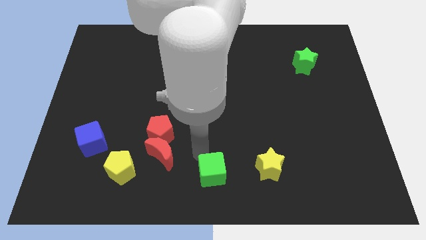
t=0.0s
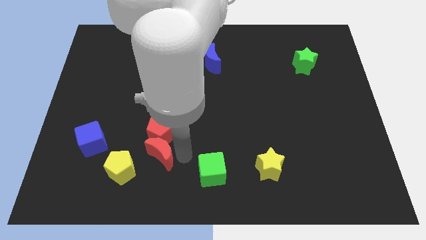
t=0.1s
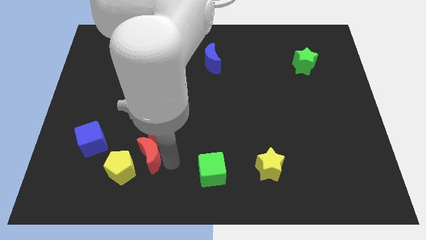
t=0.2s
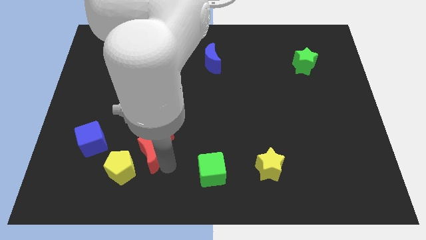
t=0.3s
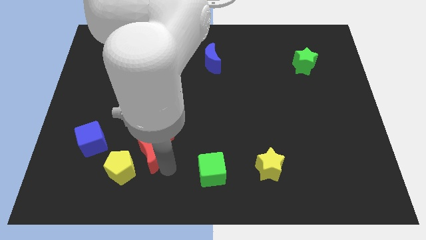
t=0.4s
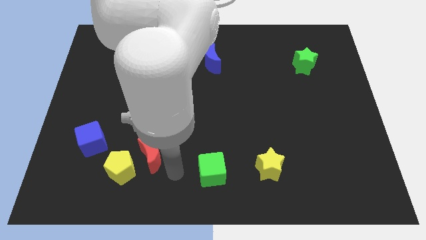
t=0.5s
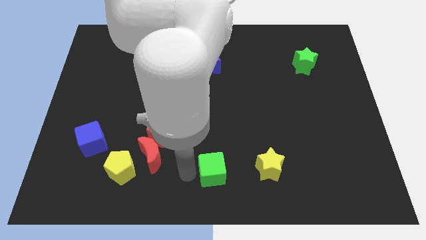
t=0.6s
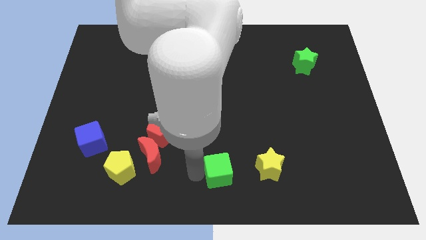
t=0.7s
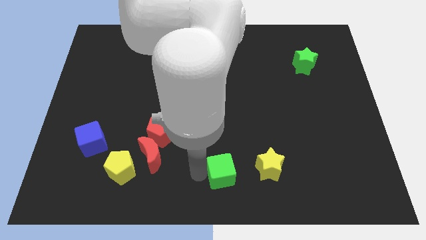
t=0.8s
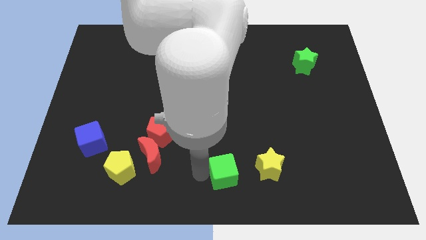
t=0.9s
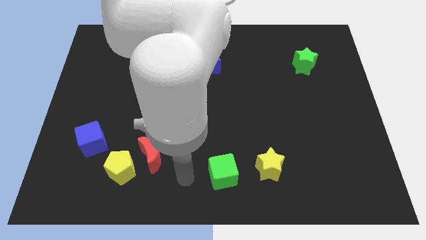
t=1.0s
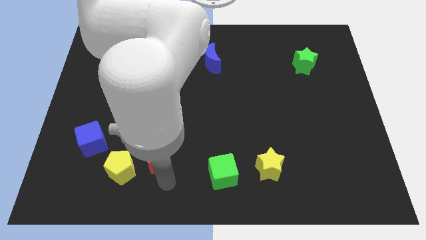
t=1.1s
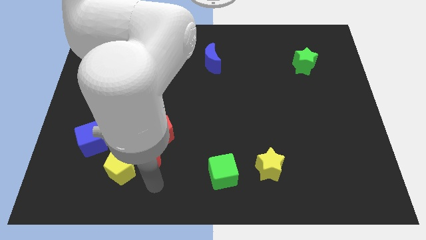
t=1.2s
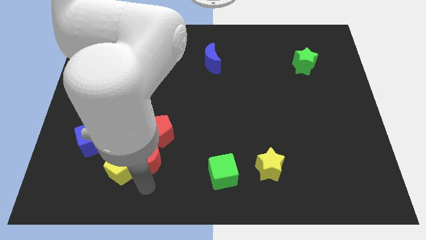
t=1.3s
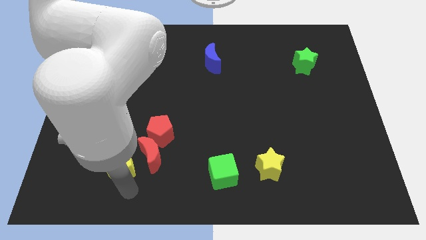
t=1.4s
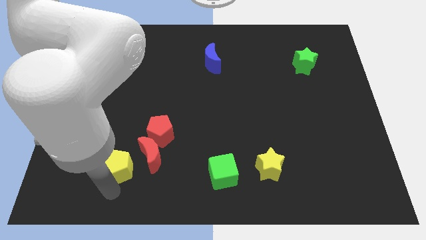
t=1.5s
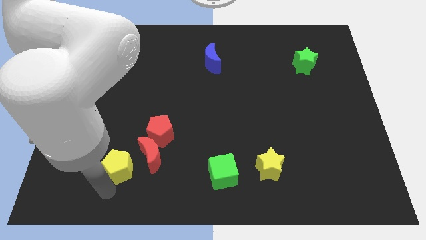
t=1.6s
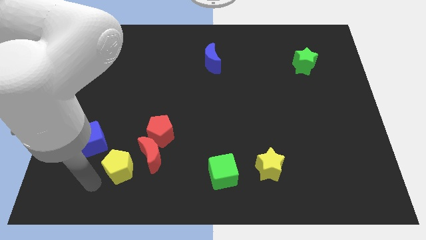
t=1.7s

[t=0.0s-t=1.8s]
slightly push the green cube towards the yellow star

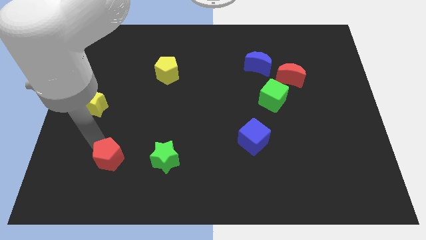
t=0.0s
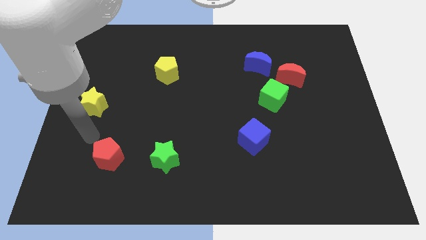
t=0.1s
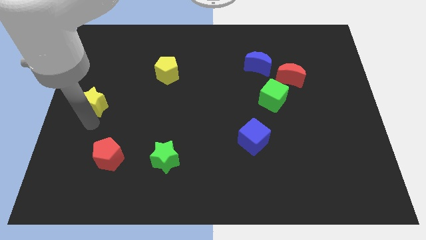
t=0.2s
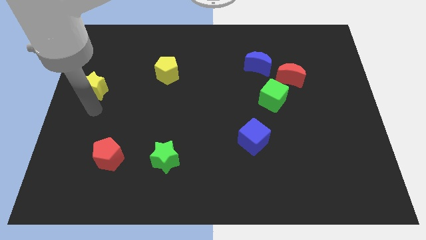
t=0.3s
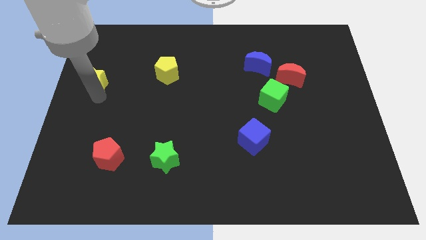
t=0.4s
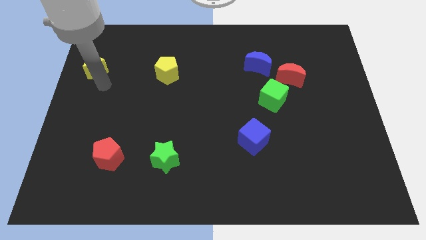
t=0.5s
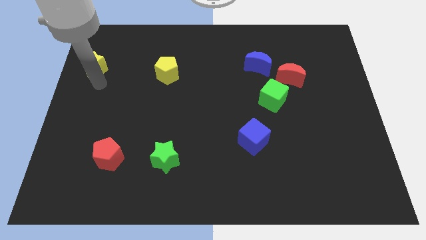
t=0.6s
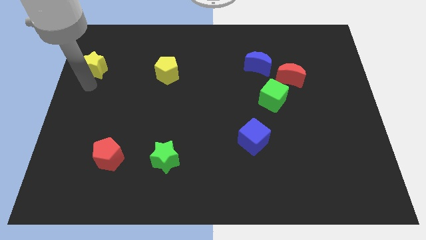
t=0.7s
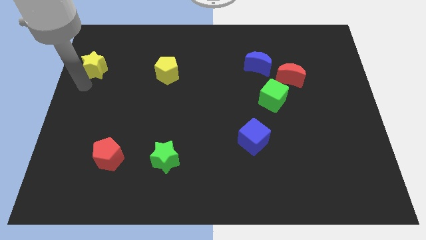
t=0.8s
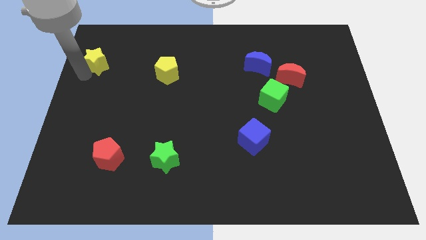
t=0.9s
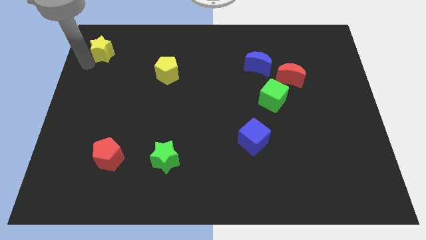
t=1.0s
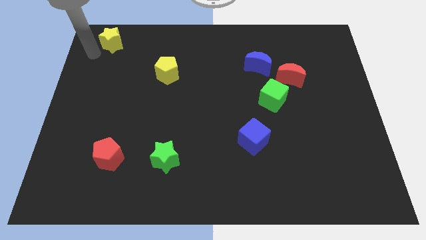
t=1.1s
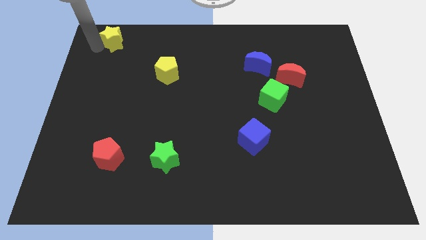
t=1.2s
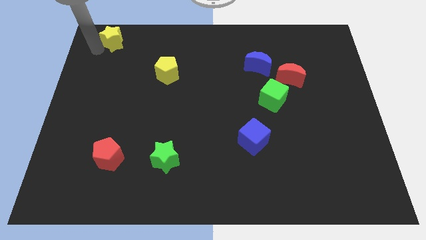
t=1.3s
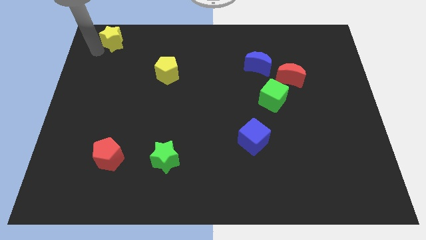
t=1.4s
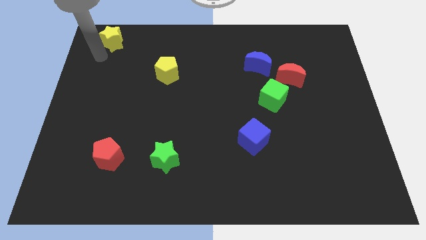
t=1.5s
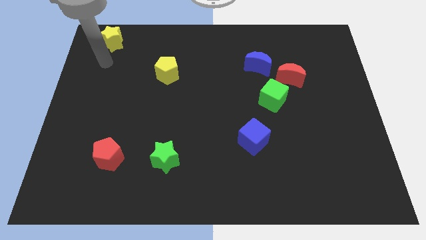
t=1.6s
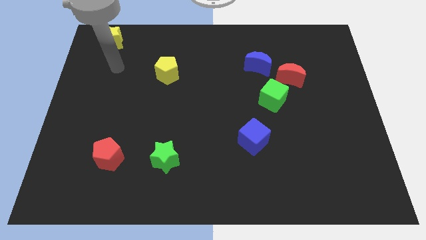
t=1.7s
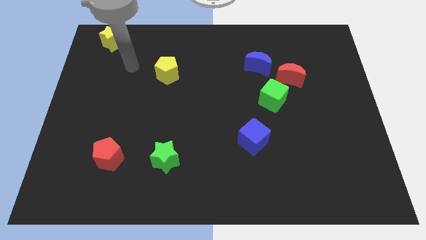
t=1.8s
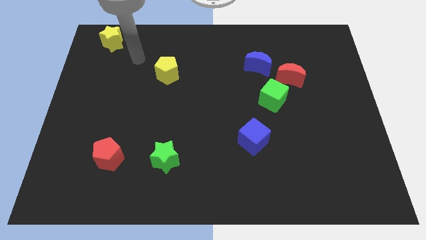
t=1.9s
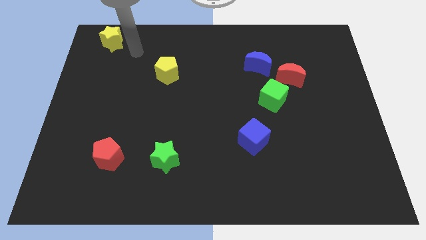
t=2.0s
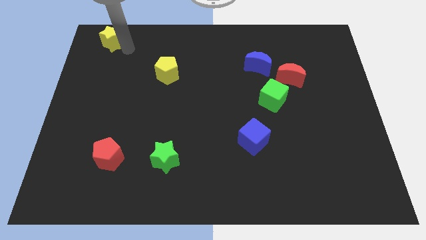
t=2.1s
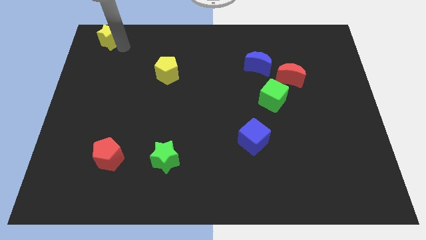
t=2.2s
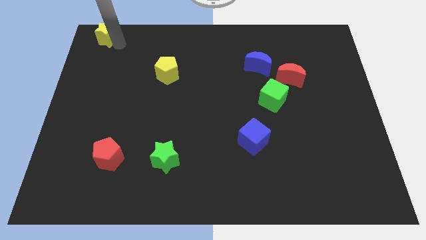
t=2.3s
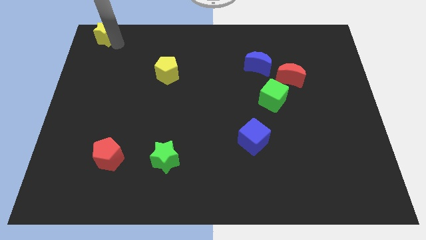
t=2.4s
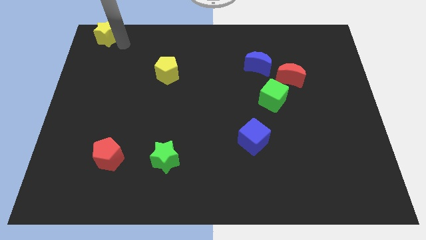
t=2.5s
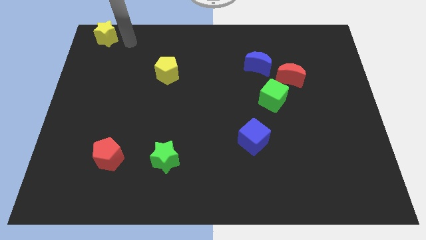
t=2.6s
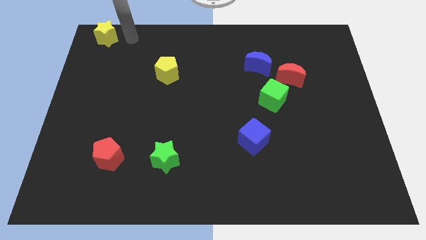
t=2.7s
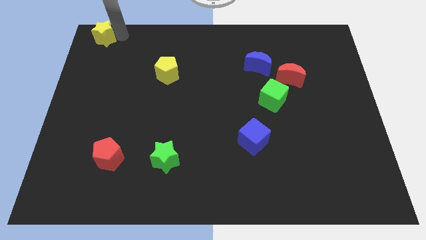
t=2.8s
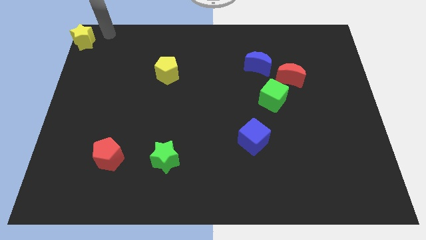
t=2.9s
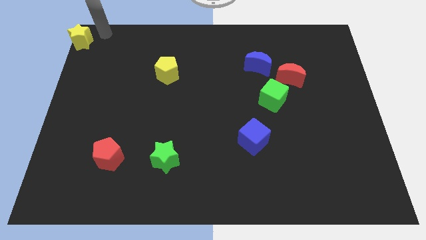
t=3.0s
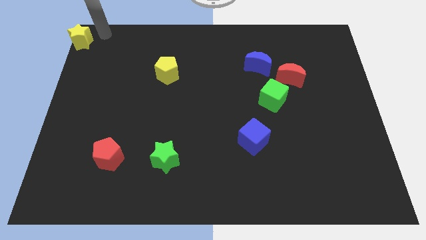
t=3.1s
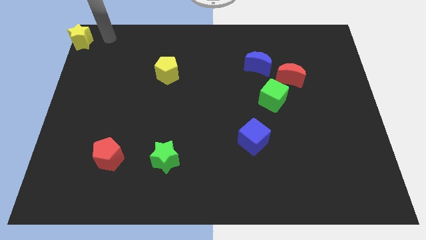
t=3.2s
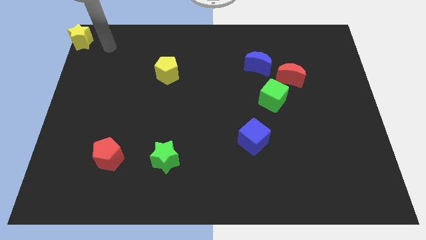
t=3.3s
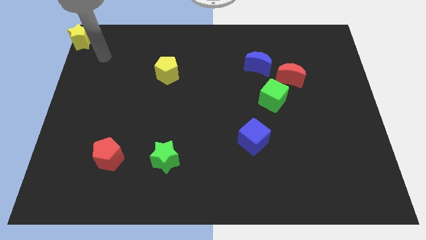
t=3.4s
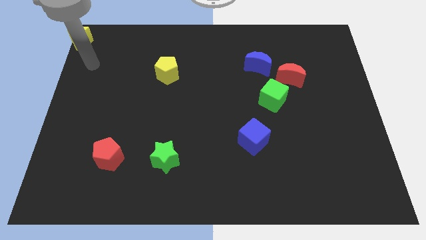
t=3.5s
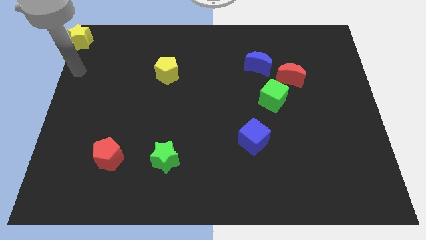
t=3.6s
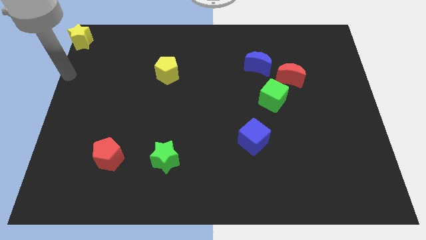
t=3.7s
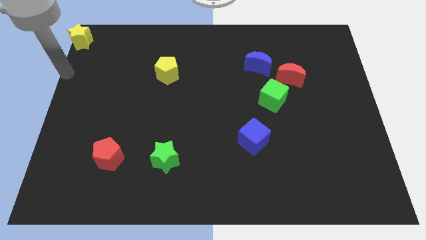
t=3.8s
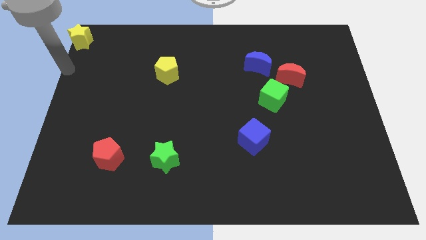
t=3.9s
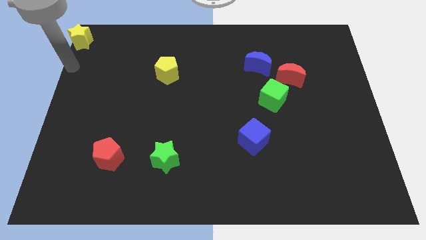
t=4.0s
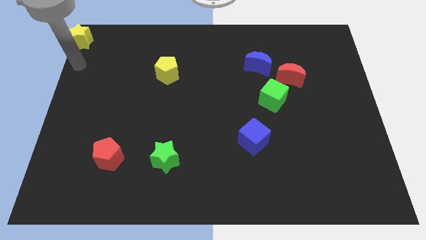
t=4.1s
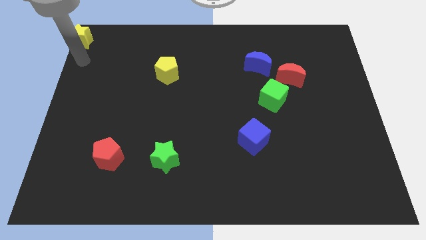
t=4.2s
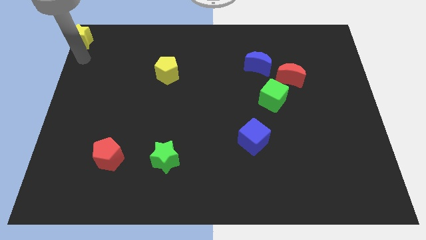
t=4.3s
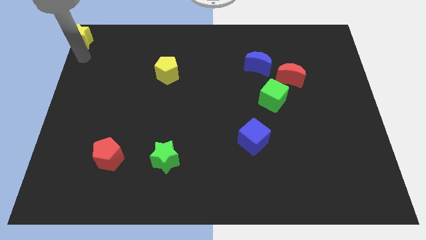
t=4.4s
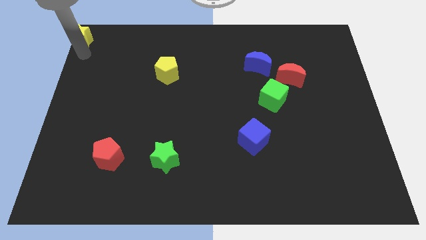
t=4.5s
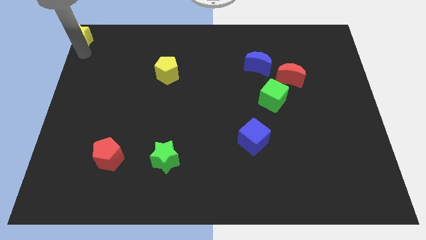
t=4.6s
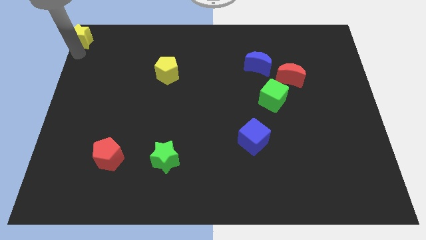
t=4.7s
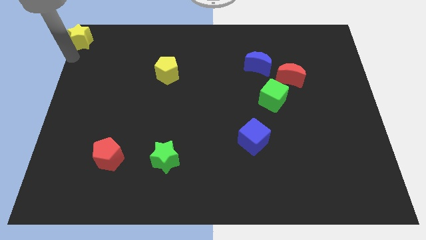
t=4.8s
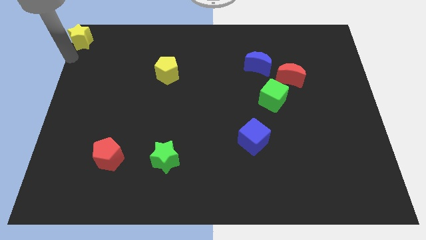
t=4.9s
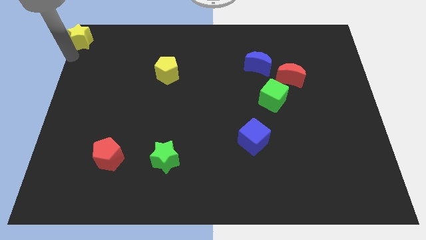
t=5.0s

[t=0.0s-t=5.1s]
move the yellow star to the top left corner of the board

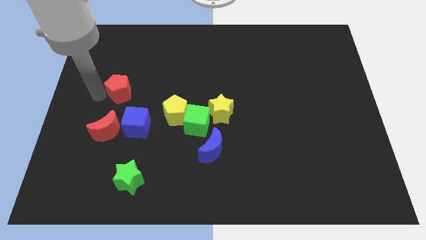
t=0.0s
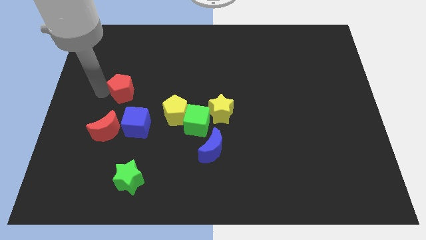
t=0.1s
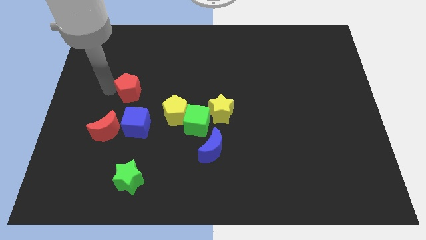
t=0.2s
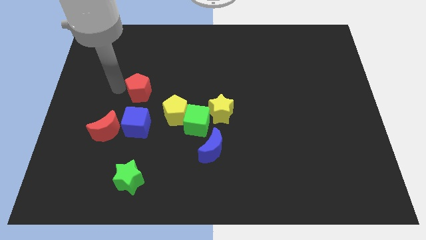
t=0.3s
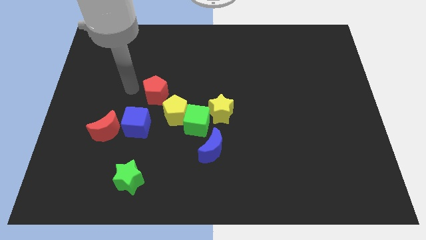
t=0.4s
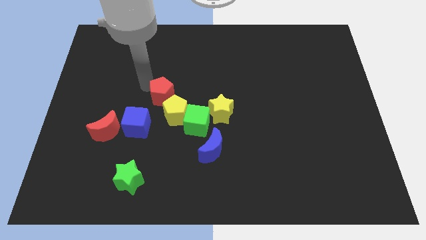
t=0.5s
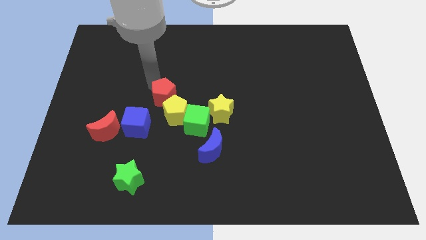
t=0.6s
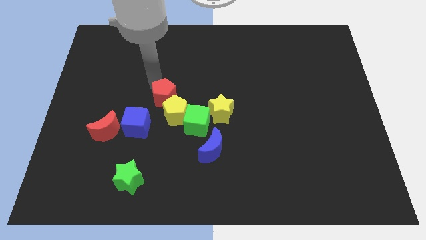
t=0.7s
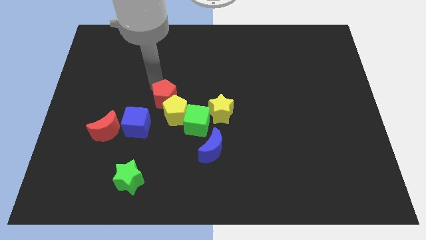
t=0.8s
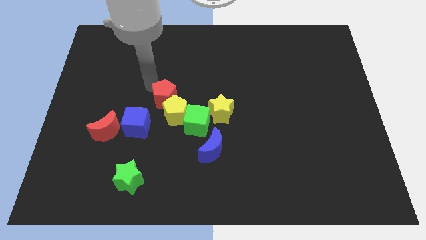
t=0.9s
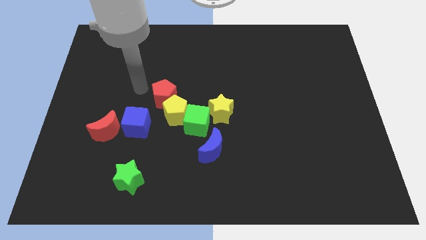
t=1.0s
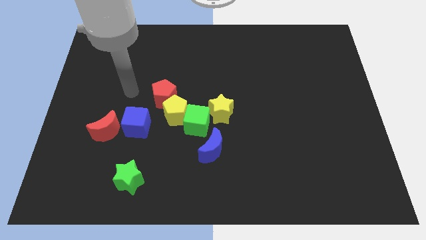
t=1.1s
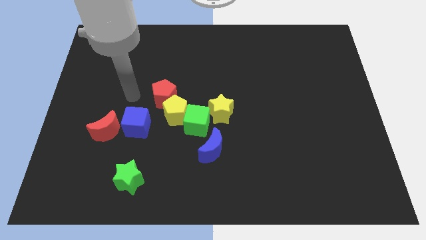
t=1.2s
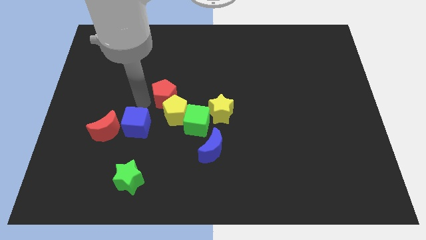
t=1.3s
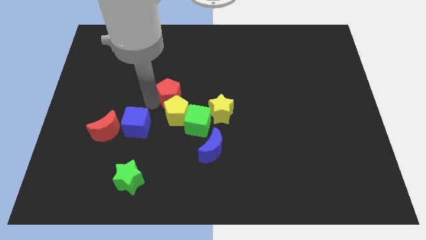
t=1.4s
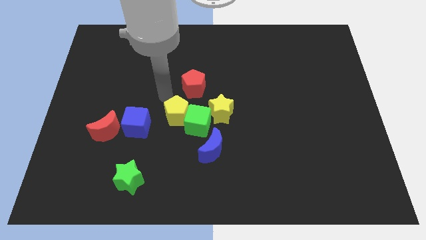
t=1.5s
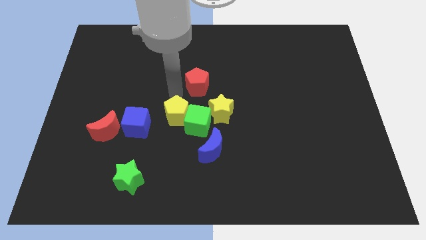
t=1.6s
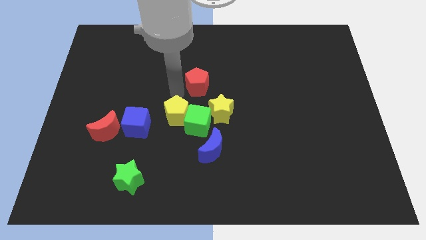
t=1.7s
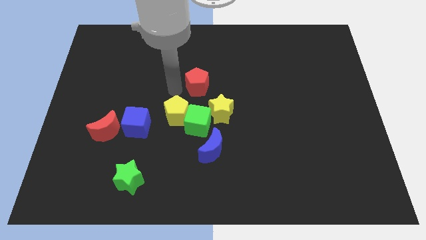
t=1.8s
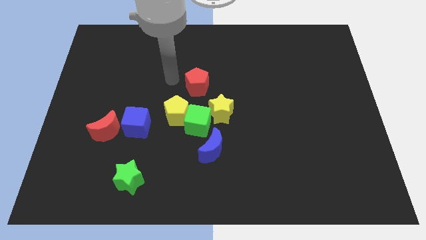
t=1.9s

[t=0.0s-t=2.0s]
place the red pentagon towards the center of the board
